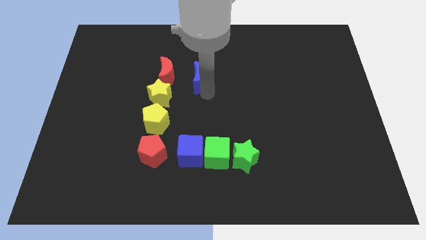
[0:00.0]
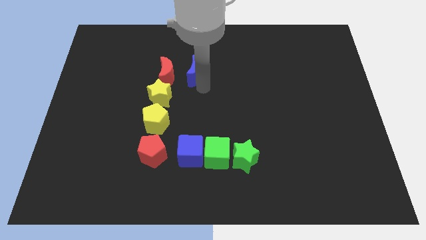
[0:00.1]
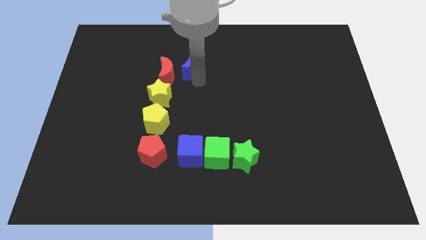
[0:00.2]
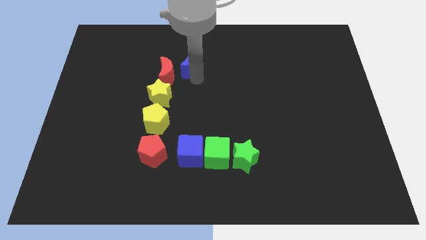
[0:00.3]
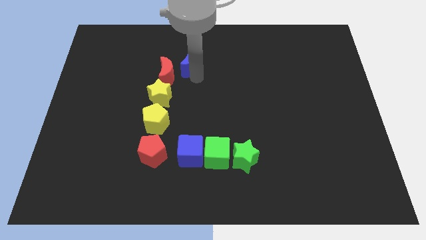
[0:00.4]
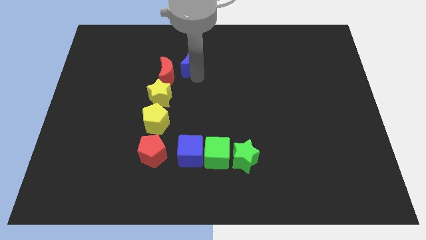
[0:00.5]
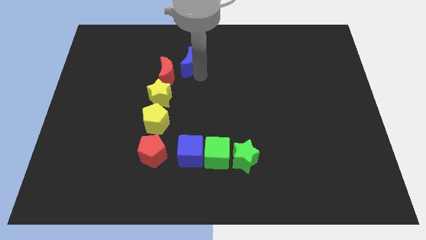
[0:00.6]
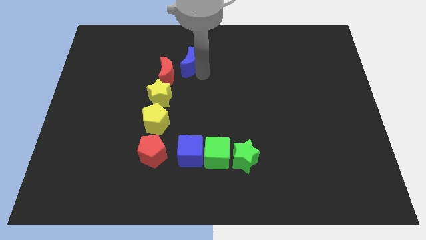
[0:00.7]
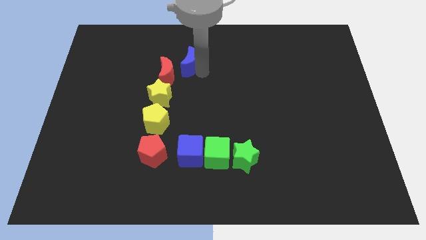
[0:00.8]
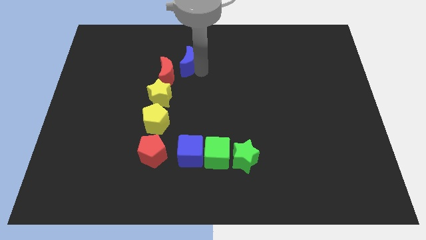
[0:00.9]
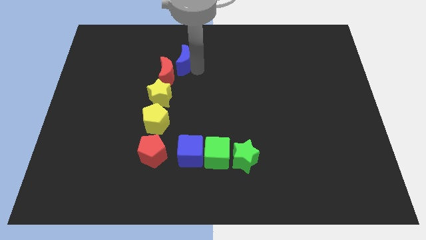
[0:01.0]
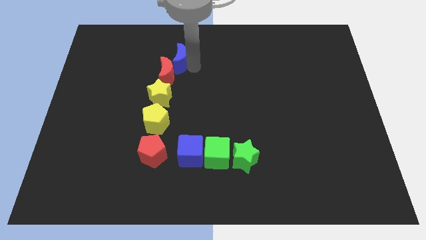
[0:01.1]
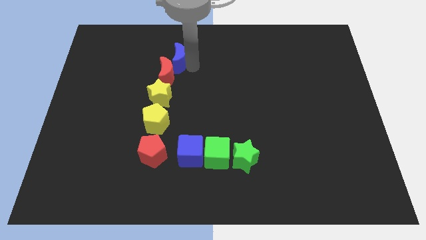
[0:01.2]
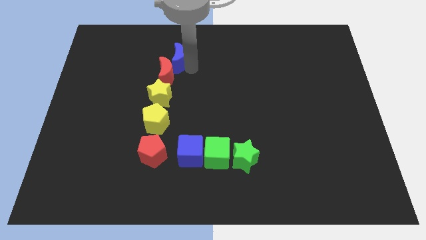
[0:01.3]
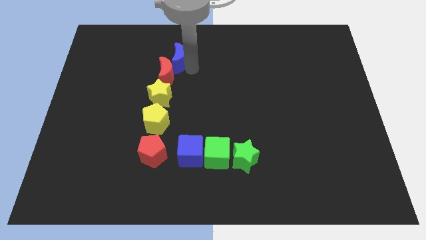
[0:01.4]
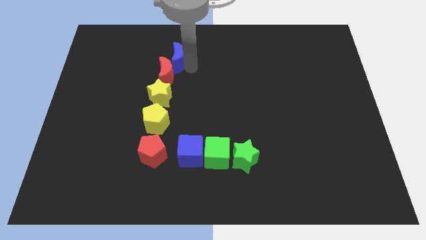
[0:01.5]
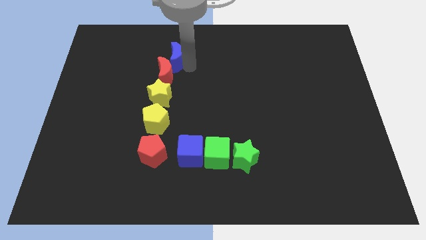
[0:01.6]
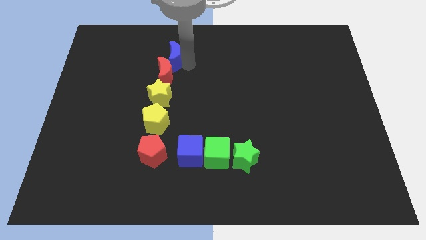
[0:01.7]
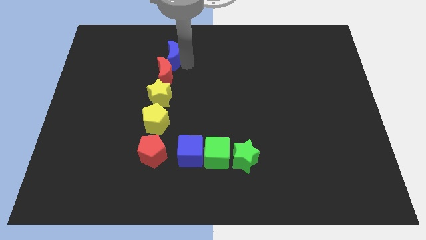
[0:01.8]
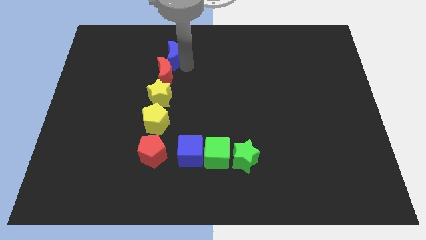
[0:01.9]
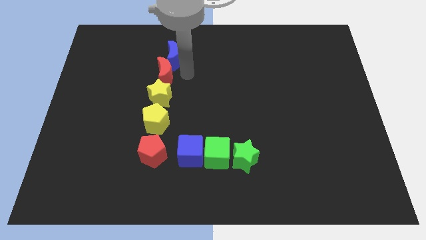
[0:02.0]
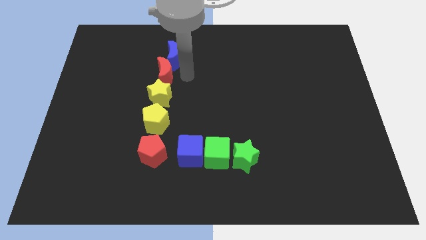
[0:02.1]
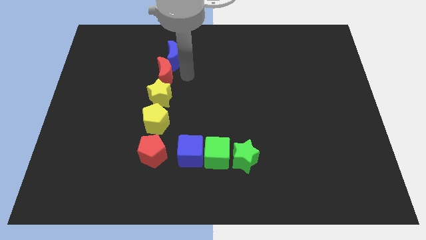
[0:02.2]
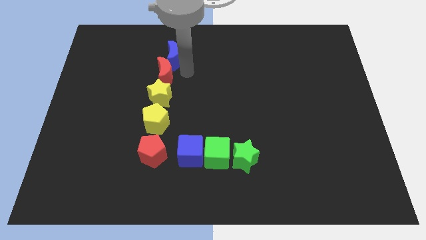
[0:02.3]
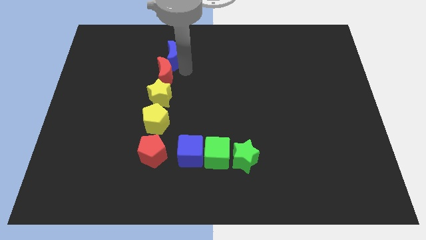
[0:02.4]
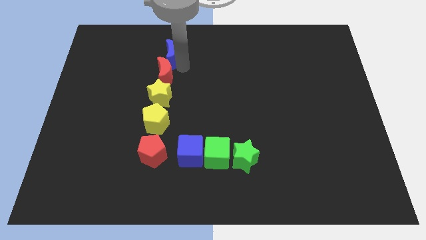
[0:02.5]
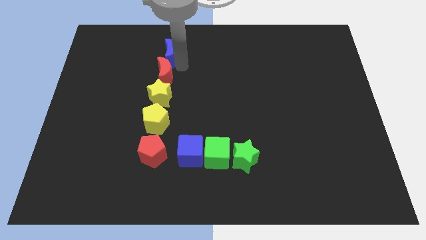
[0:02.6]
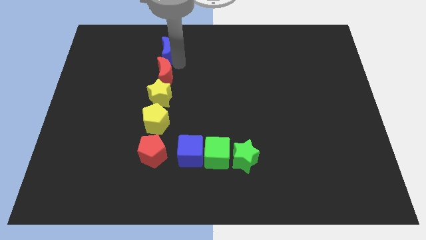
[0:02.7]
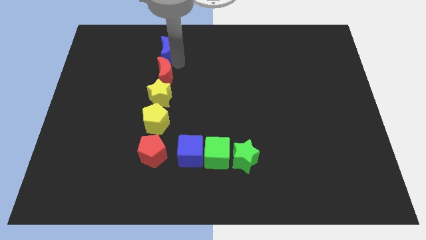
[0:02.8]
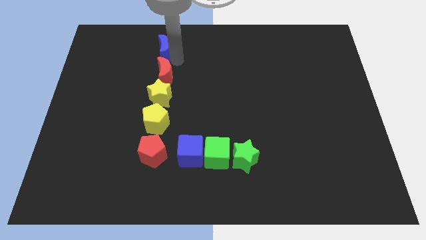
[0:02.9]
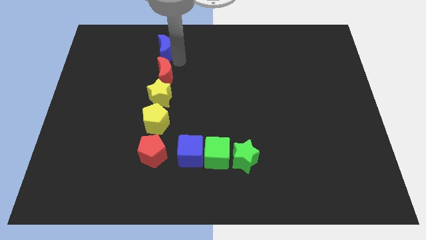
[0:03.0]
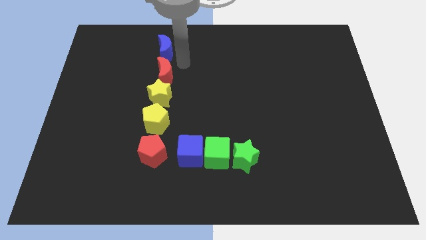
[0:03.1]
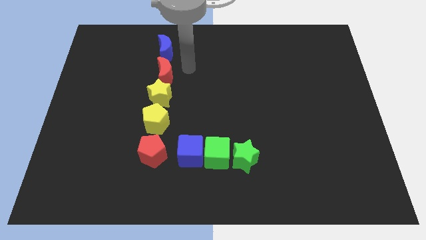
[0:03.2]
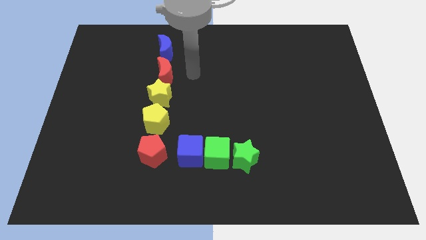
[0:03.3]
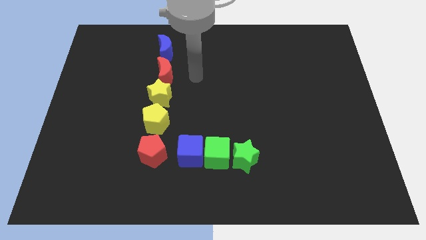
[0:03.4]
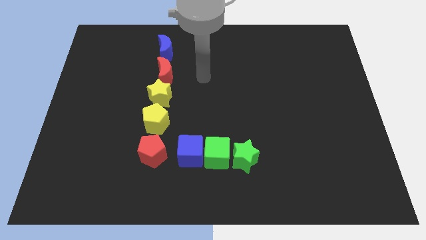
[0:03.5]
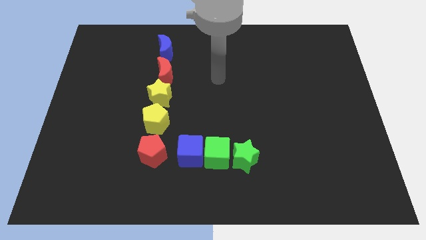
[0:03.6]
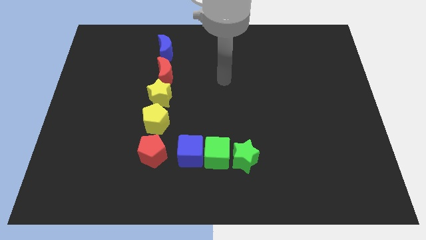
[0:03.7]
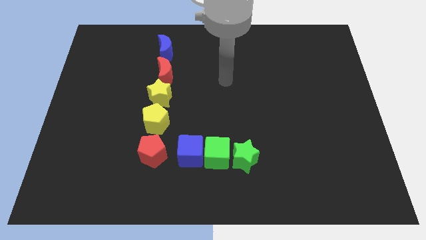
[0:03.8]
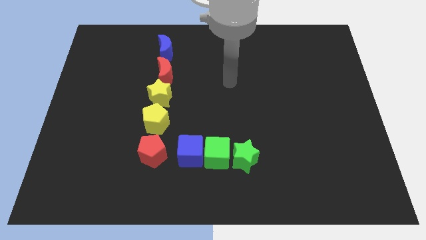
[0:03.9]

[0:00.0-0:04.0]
move blue moon to the top of red moon

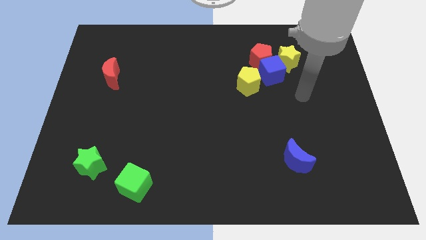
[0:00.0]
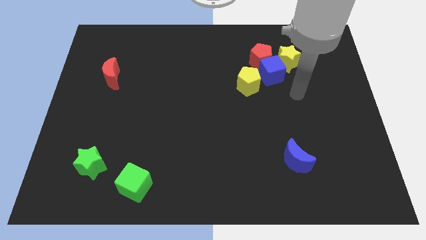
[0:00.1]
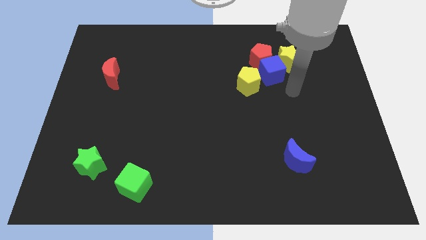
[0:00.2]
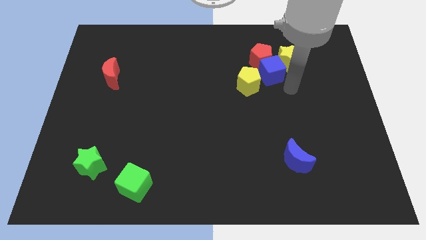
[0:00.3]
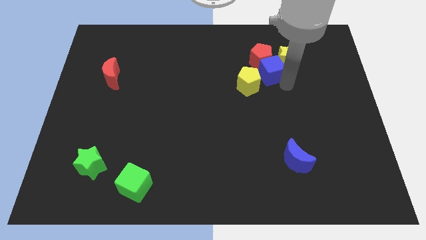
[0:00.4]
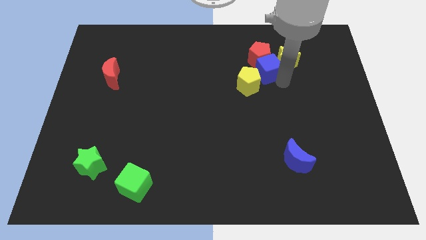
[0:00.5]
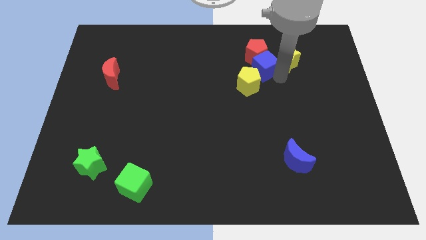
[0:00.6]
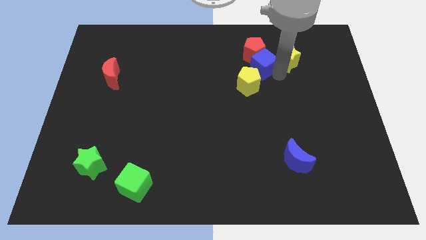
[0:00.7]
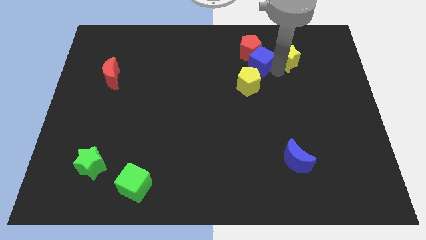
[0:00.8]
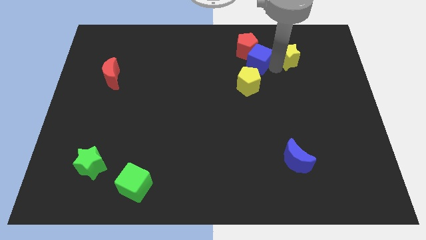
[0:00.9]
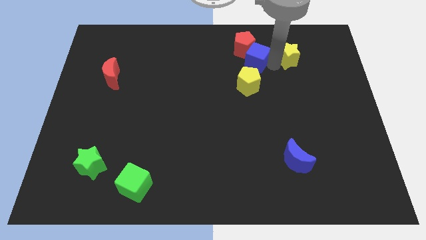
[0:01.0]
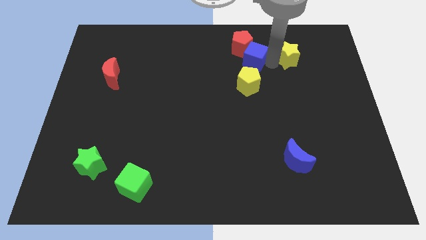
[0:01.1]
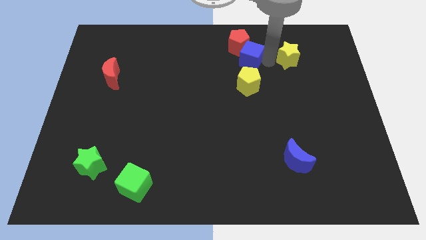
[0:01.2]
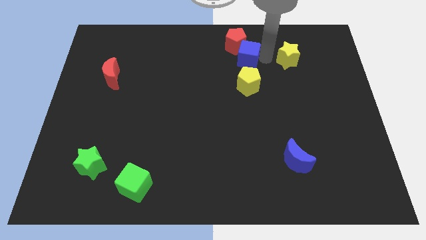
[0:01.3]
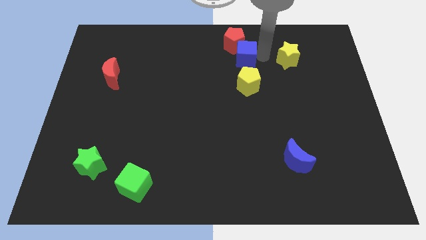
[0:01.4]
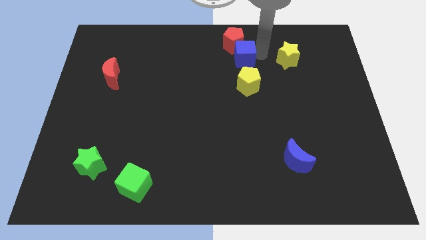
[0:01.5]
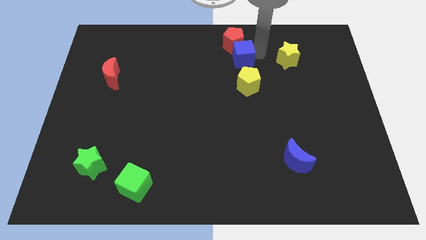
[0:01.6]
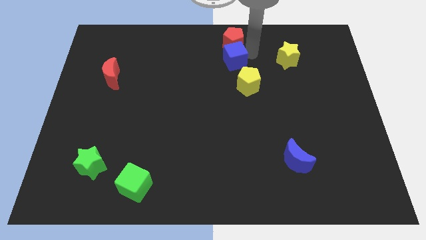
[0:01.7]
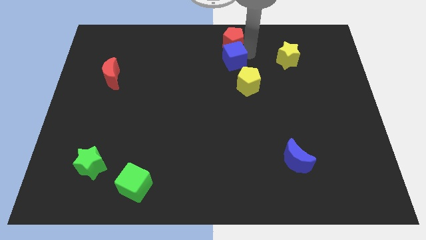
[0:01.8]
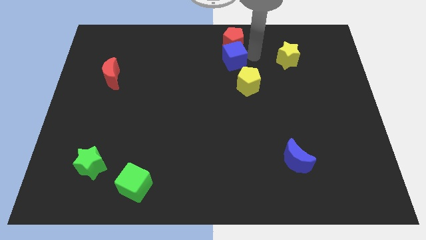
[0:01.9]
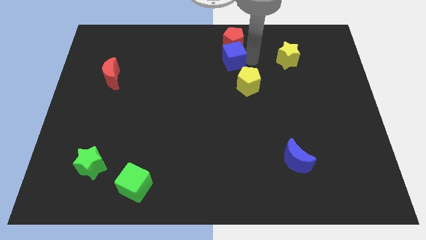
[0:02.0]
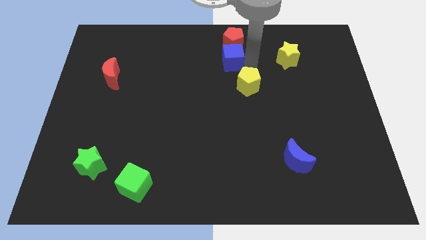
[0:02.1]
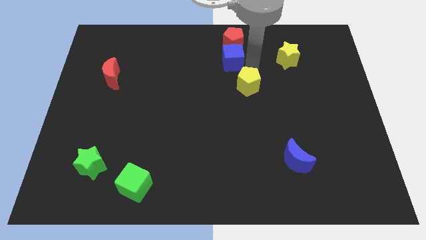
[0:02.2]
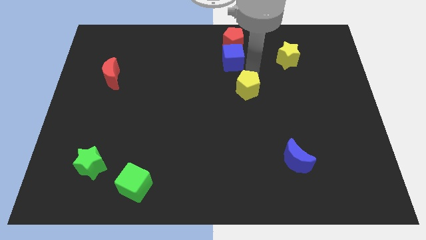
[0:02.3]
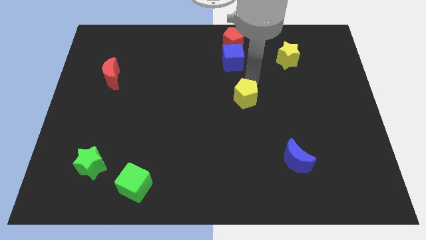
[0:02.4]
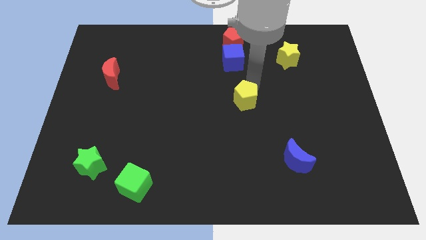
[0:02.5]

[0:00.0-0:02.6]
separate yellow pentagon from blue cube

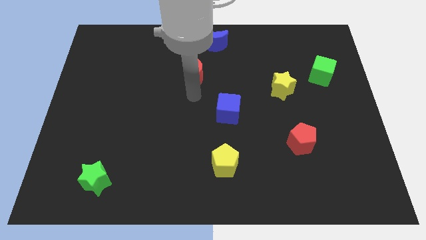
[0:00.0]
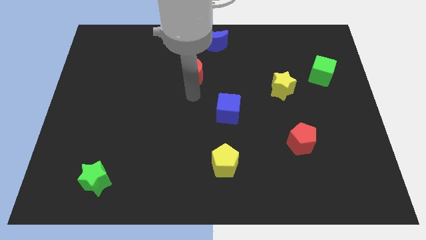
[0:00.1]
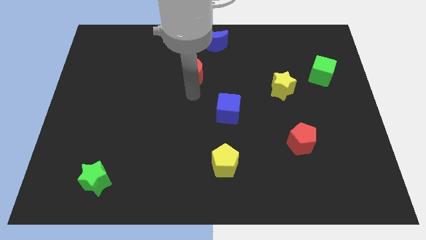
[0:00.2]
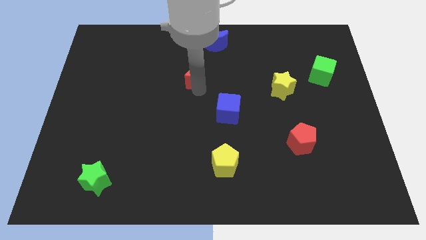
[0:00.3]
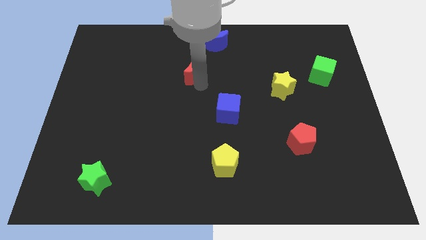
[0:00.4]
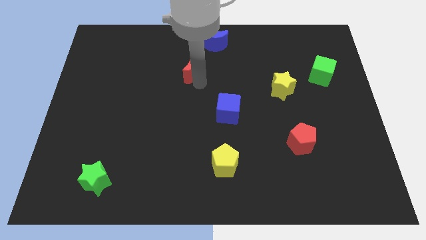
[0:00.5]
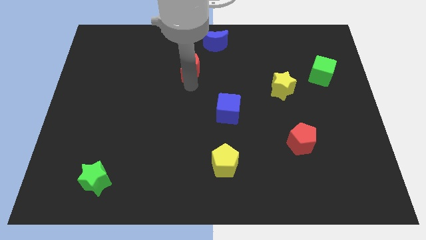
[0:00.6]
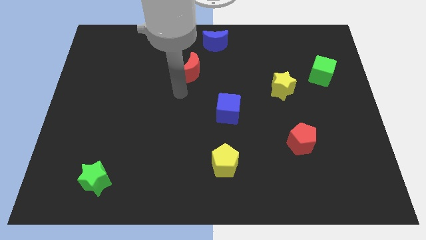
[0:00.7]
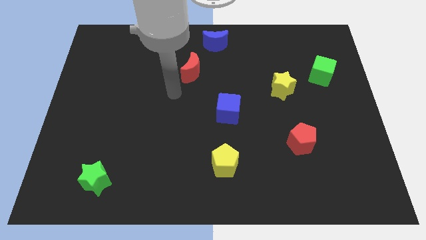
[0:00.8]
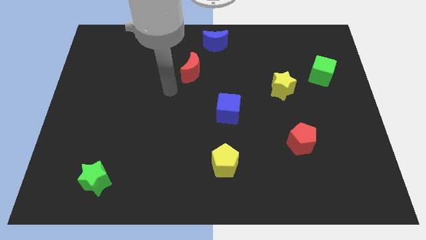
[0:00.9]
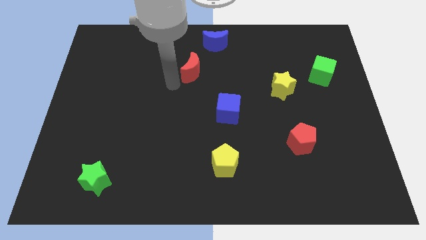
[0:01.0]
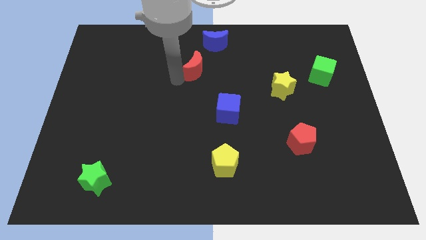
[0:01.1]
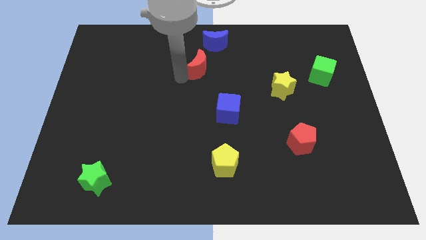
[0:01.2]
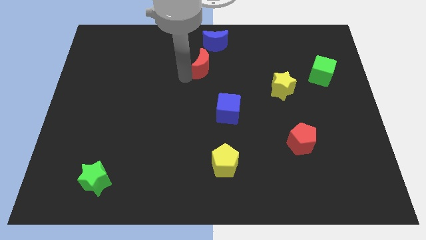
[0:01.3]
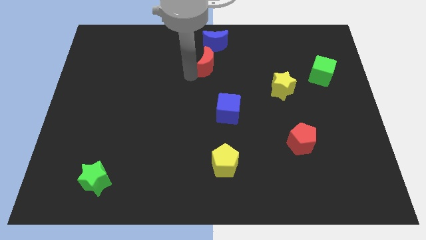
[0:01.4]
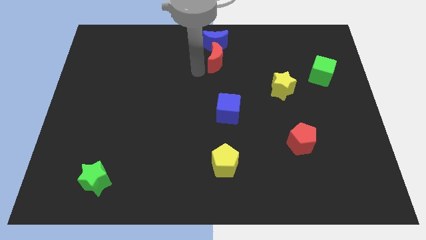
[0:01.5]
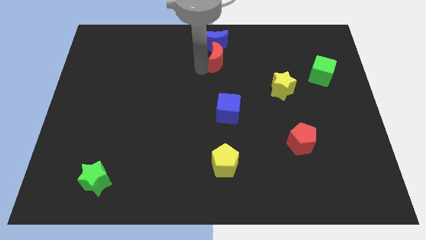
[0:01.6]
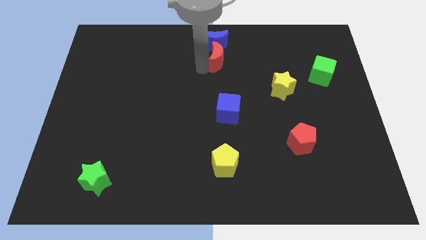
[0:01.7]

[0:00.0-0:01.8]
move the red moon vertically below the blue moon

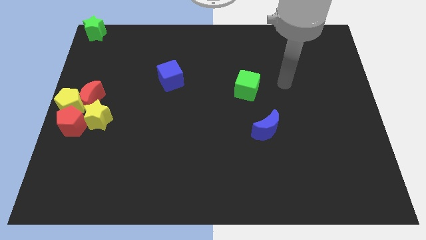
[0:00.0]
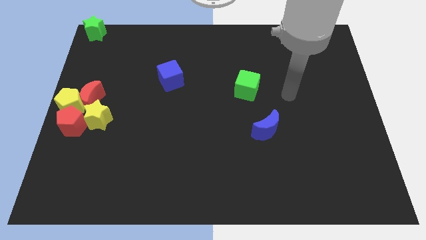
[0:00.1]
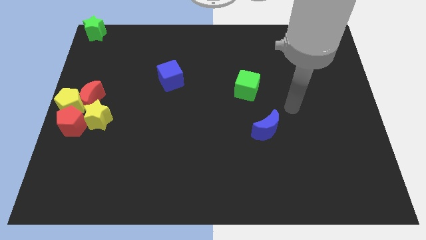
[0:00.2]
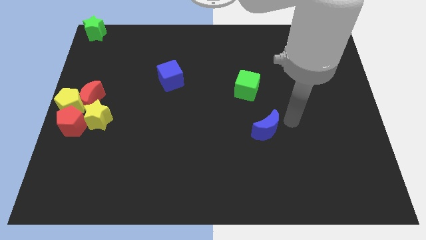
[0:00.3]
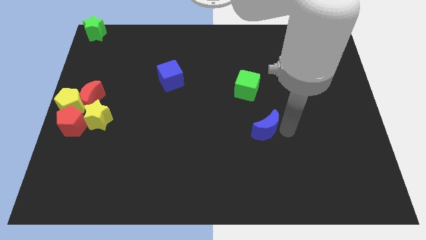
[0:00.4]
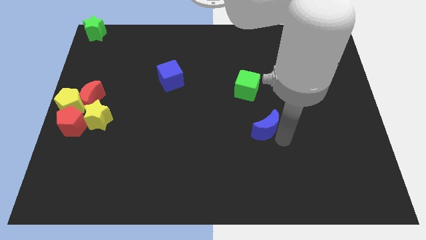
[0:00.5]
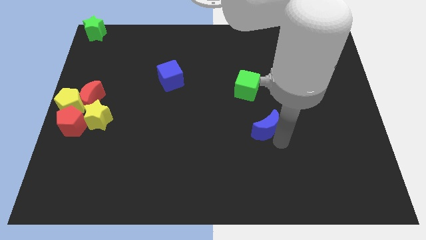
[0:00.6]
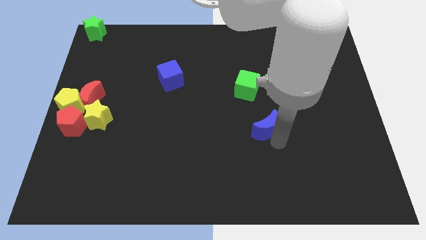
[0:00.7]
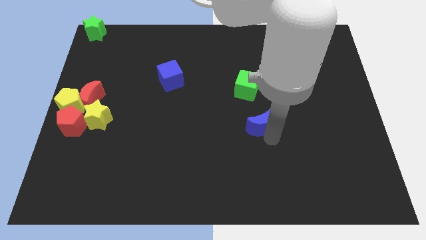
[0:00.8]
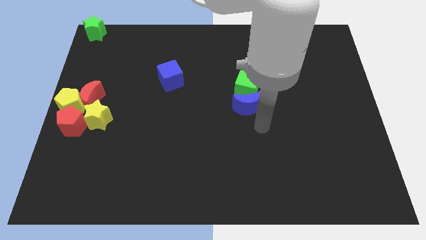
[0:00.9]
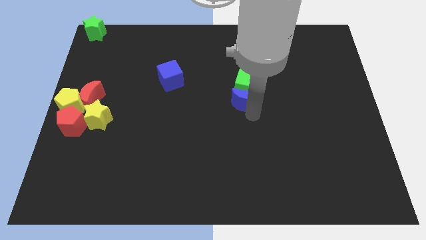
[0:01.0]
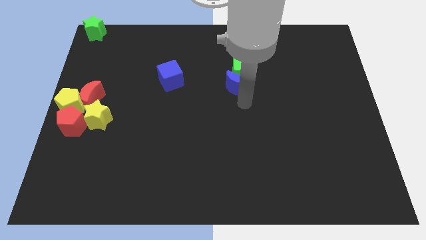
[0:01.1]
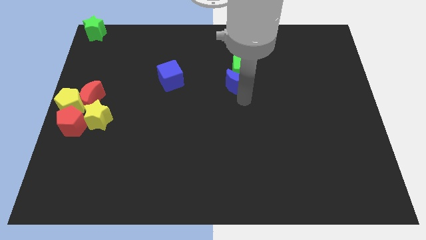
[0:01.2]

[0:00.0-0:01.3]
push the blue moon into the green cube
